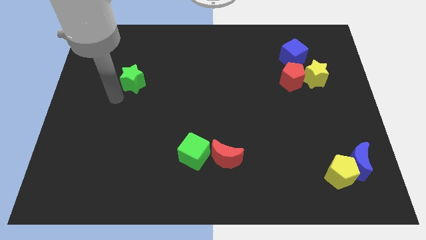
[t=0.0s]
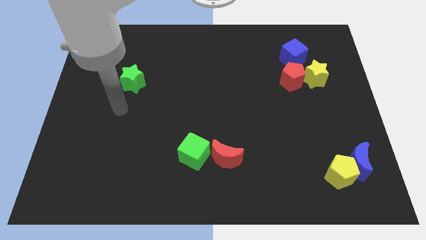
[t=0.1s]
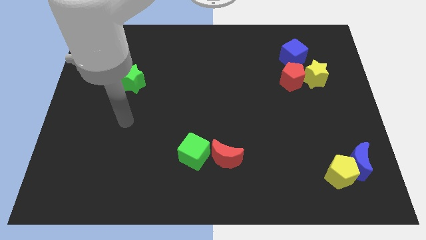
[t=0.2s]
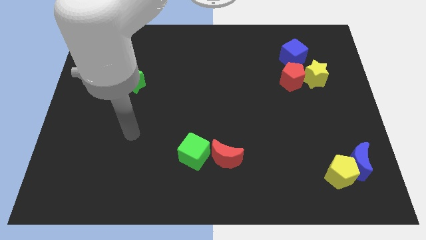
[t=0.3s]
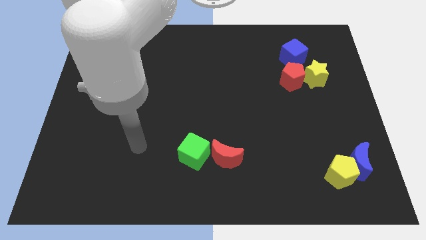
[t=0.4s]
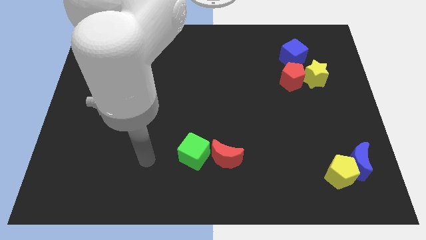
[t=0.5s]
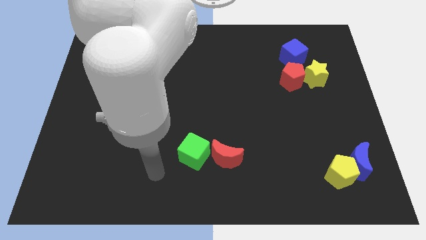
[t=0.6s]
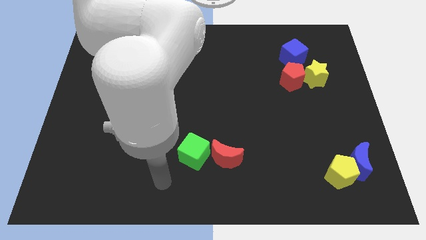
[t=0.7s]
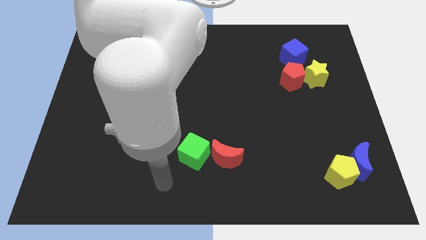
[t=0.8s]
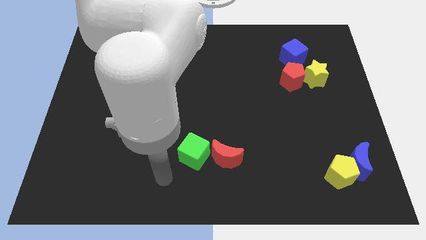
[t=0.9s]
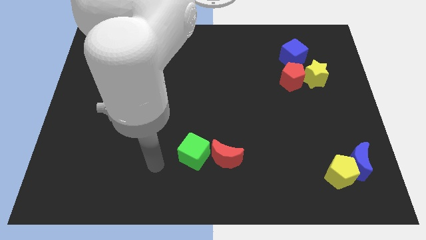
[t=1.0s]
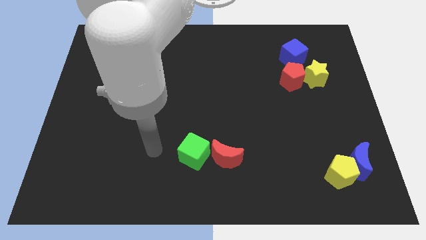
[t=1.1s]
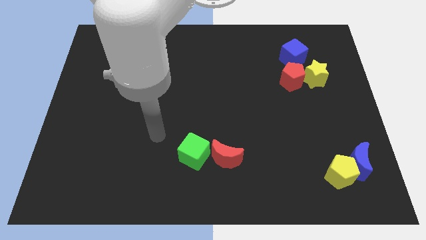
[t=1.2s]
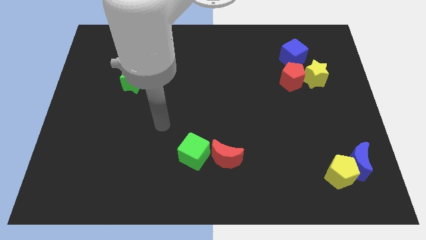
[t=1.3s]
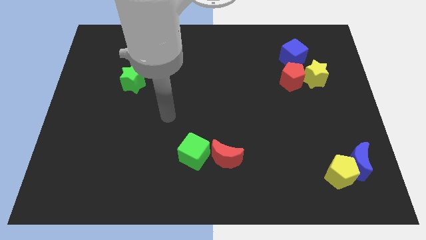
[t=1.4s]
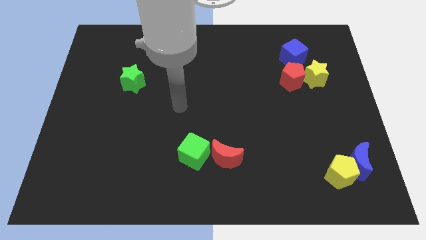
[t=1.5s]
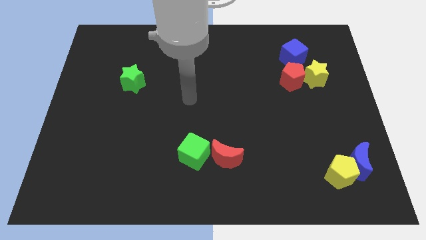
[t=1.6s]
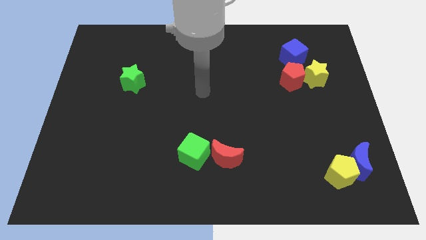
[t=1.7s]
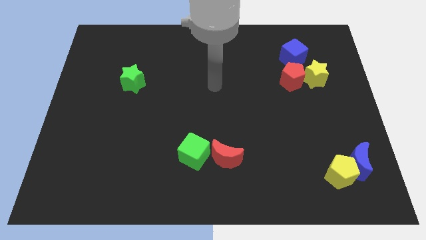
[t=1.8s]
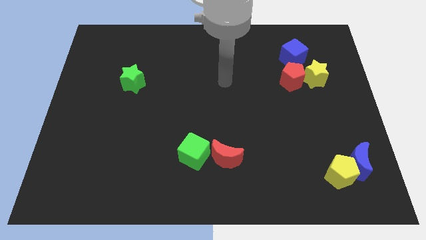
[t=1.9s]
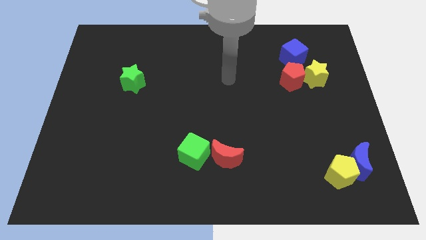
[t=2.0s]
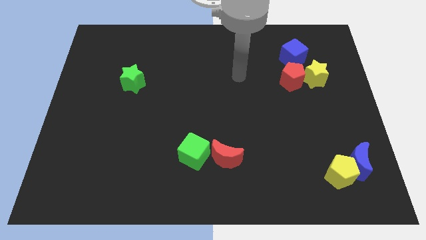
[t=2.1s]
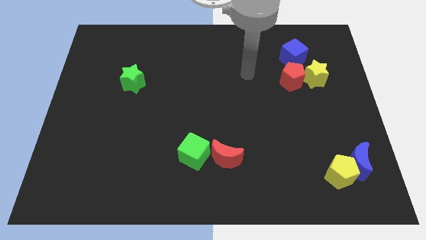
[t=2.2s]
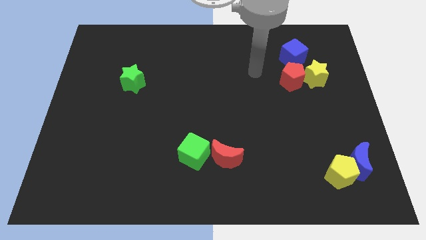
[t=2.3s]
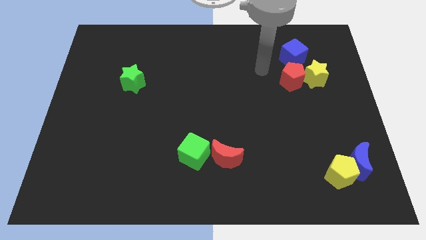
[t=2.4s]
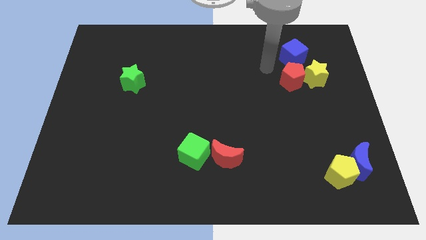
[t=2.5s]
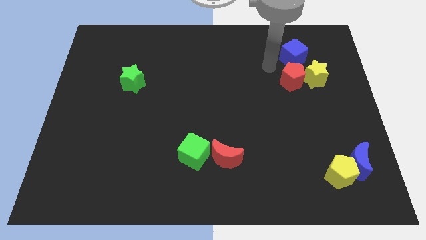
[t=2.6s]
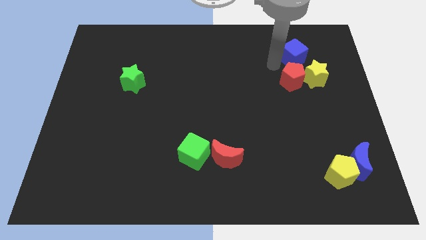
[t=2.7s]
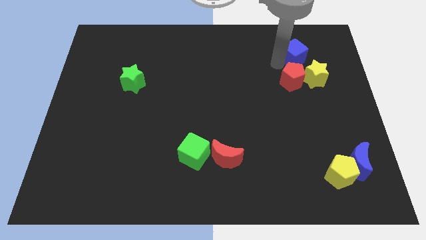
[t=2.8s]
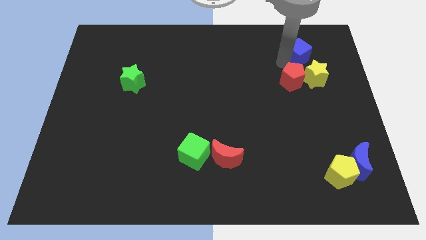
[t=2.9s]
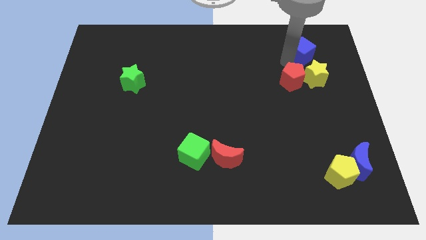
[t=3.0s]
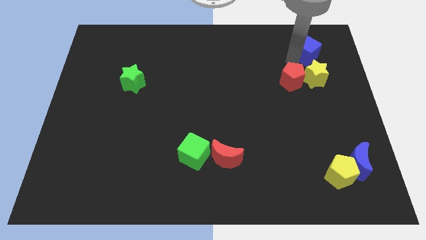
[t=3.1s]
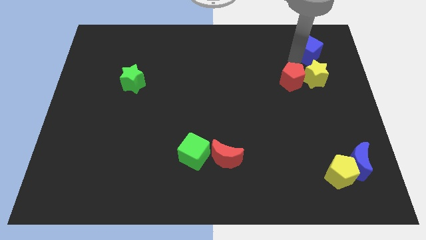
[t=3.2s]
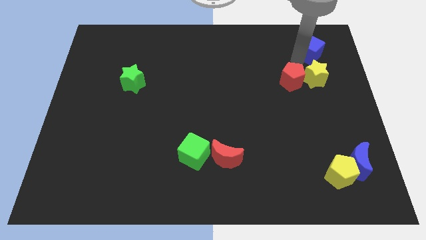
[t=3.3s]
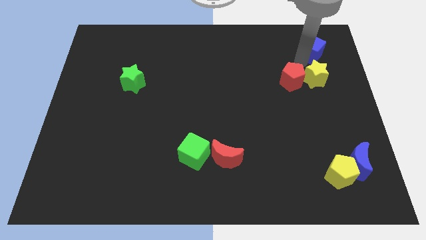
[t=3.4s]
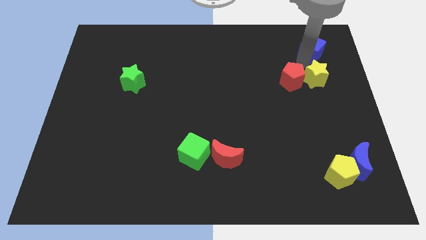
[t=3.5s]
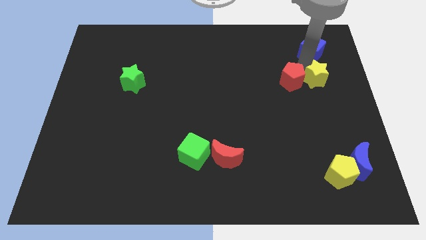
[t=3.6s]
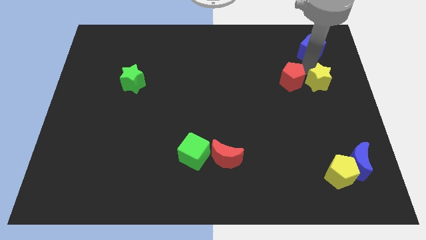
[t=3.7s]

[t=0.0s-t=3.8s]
move the blue cube to the top of the yellow star

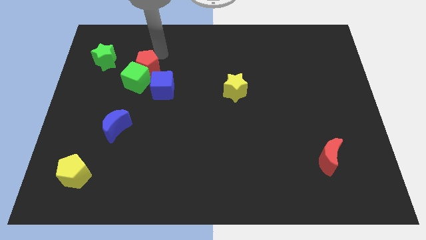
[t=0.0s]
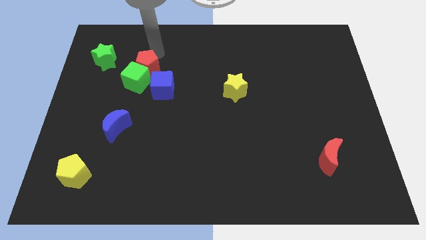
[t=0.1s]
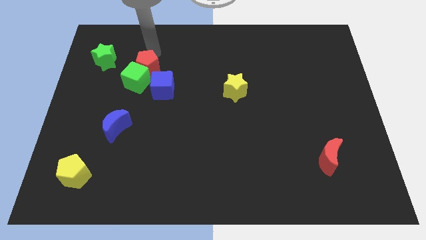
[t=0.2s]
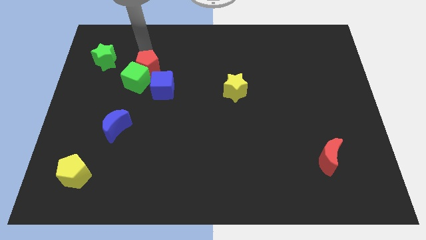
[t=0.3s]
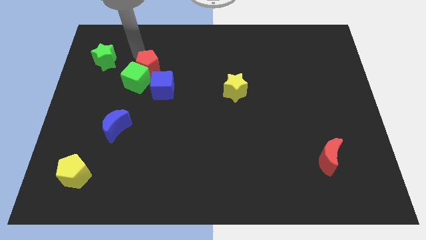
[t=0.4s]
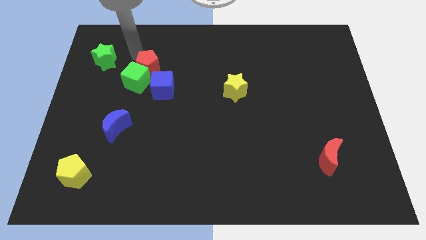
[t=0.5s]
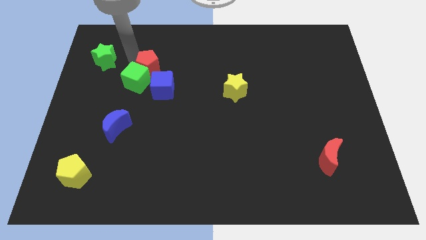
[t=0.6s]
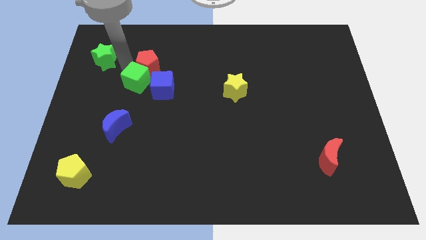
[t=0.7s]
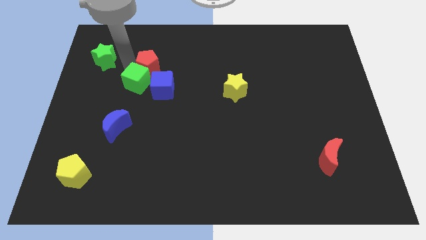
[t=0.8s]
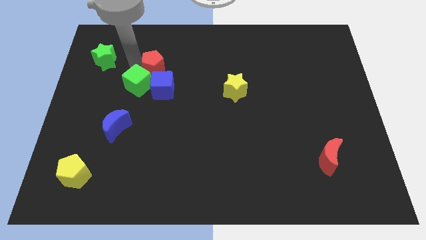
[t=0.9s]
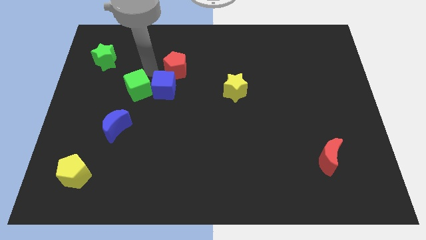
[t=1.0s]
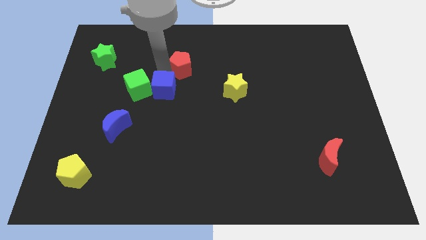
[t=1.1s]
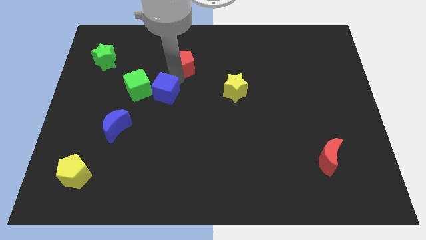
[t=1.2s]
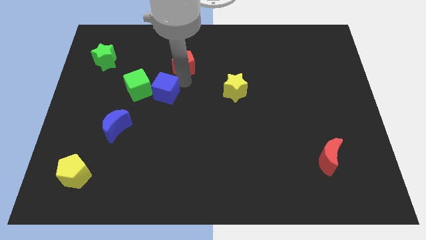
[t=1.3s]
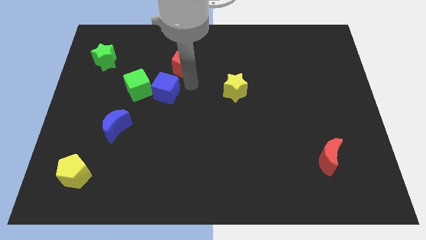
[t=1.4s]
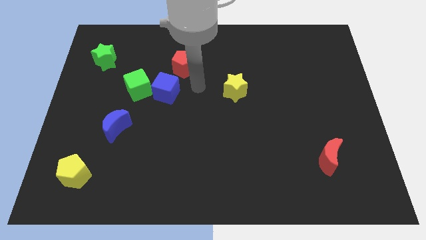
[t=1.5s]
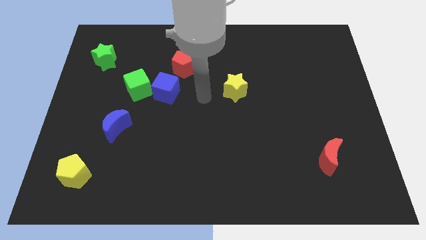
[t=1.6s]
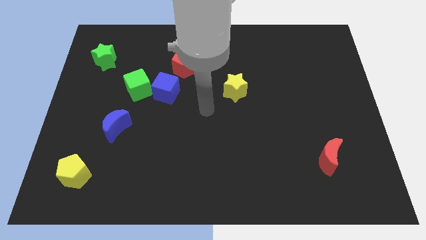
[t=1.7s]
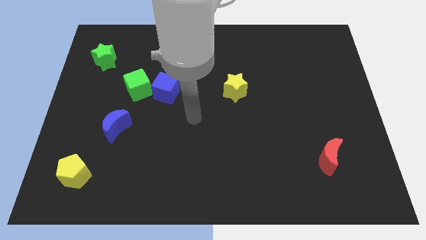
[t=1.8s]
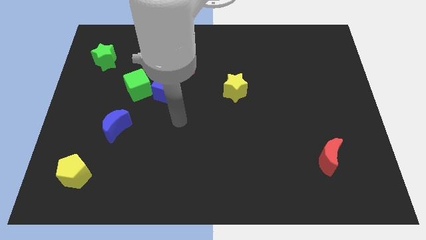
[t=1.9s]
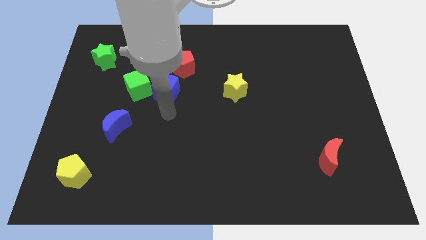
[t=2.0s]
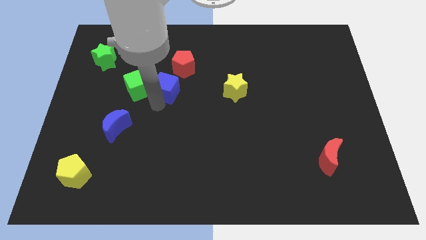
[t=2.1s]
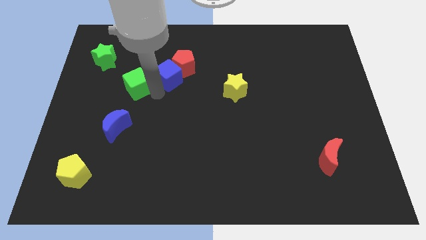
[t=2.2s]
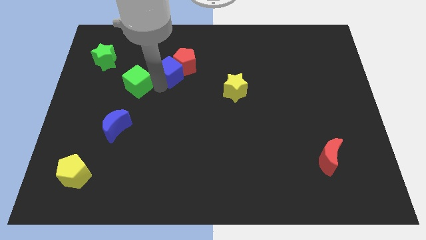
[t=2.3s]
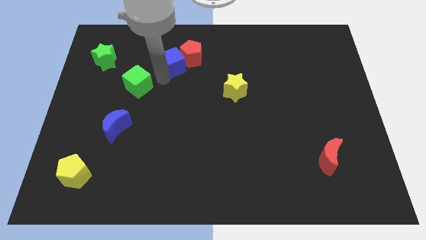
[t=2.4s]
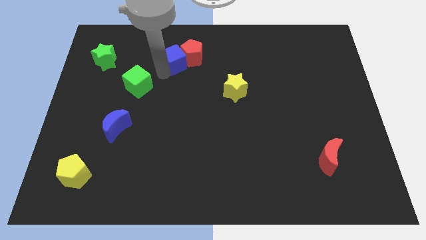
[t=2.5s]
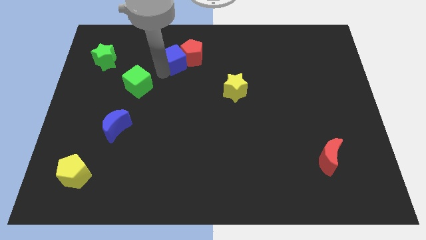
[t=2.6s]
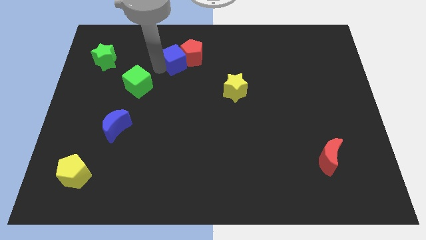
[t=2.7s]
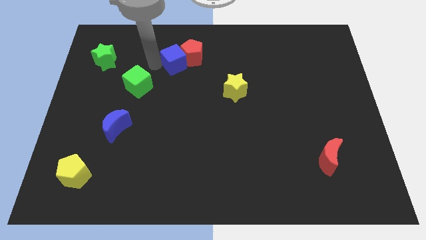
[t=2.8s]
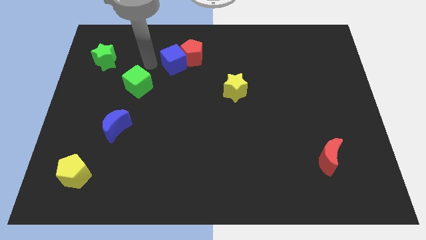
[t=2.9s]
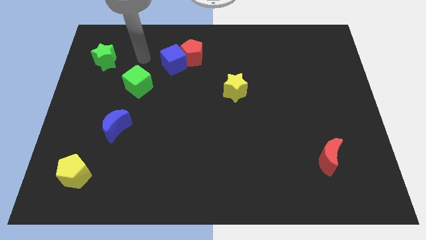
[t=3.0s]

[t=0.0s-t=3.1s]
separate the blue cube and red pentagon from the green cube

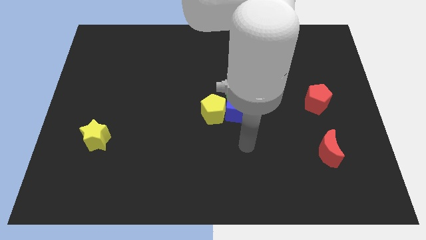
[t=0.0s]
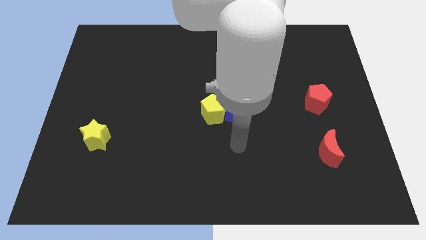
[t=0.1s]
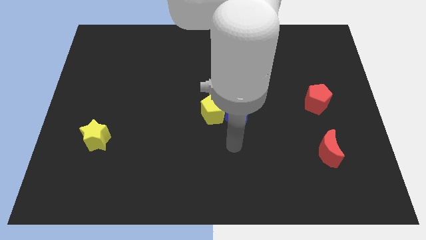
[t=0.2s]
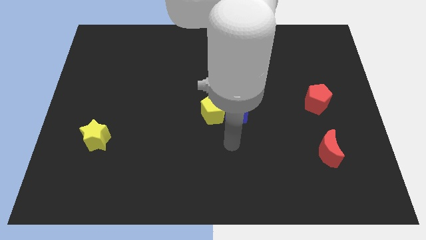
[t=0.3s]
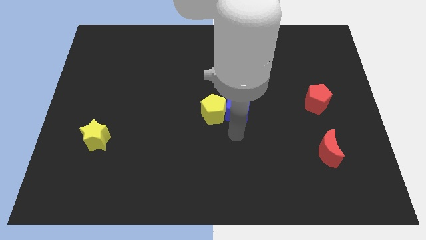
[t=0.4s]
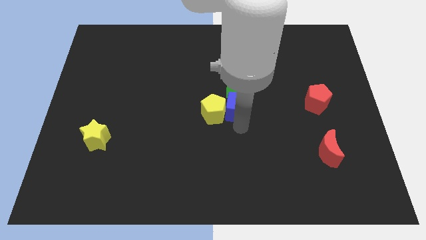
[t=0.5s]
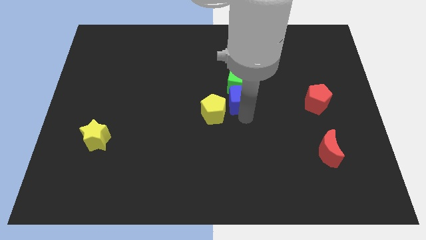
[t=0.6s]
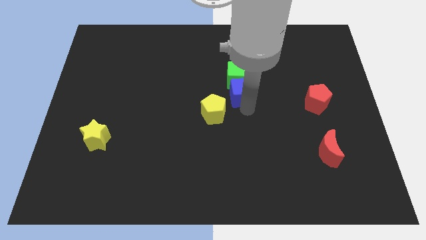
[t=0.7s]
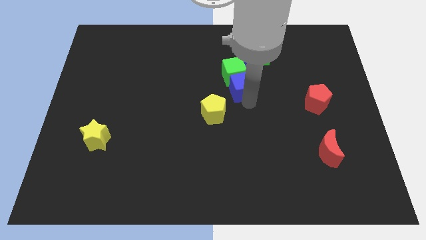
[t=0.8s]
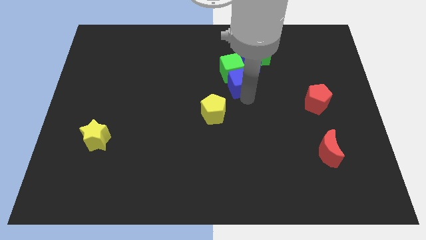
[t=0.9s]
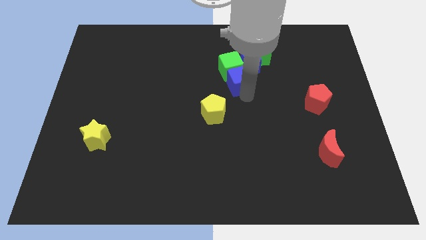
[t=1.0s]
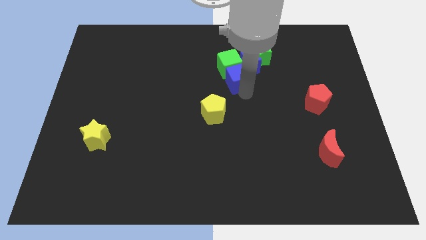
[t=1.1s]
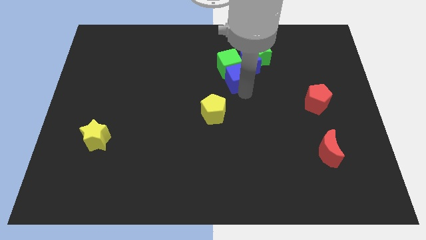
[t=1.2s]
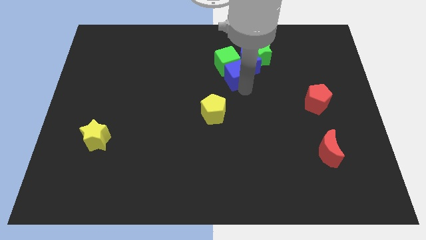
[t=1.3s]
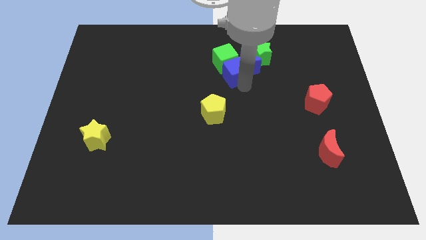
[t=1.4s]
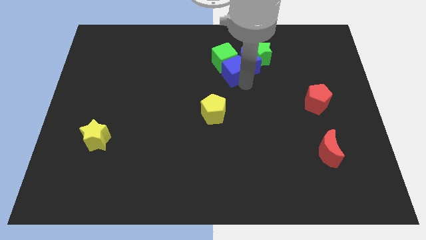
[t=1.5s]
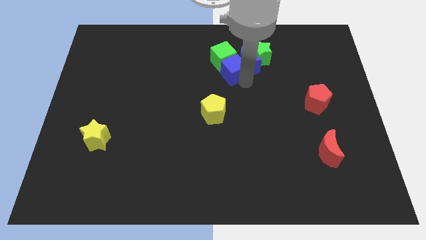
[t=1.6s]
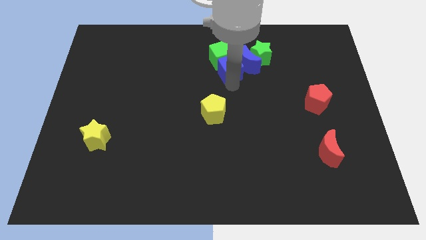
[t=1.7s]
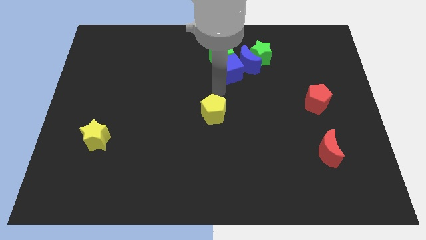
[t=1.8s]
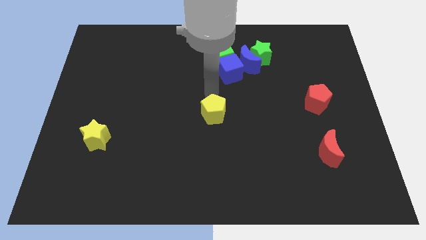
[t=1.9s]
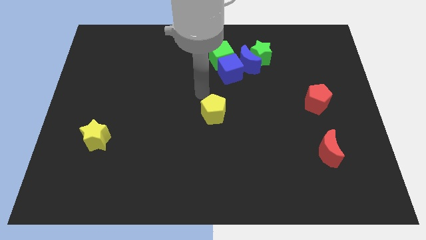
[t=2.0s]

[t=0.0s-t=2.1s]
place the green cube to the left of the blue moon
